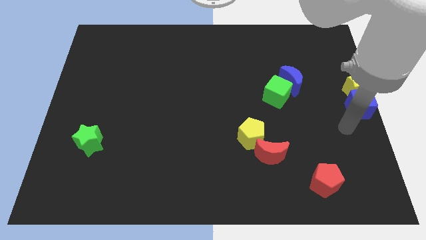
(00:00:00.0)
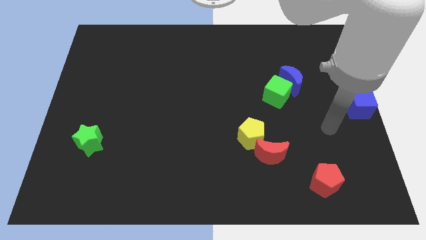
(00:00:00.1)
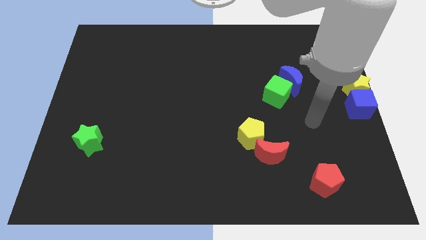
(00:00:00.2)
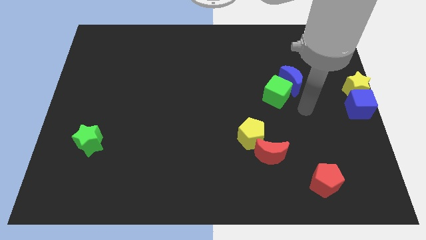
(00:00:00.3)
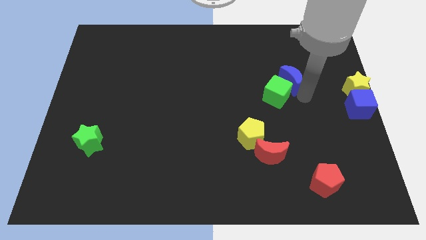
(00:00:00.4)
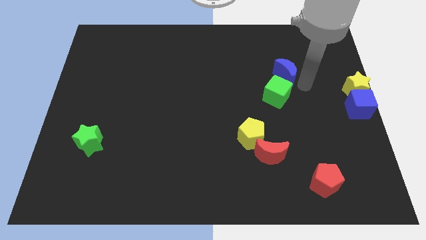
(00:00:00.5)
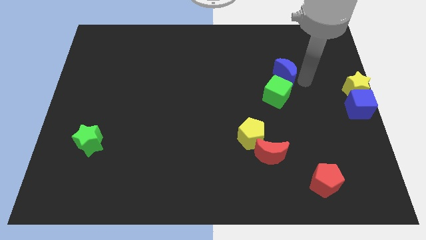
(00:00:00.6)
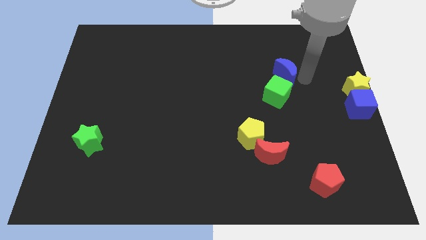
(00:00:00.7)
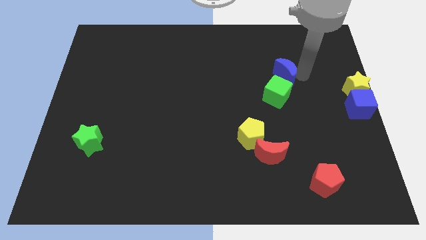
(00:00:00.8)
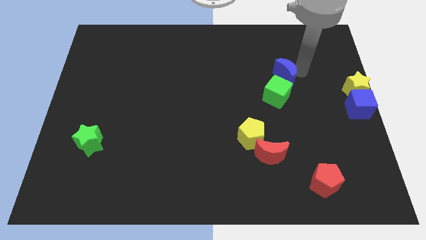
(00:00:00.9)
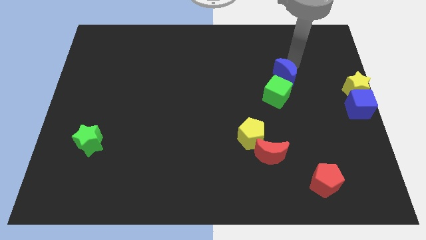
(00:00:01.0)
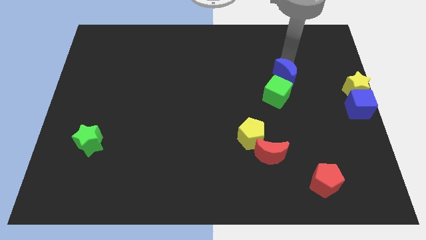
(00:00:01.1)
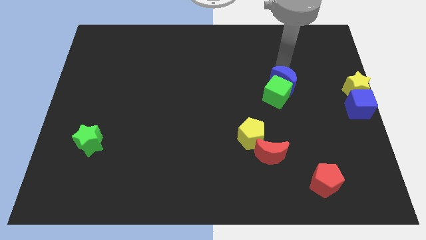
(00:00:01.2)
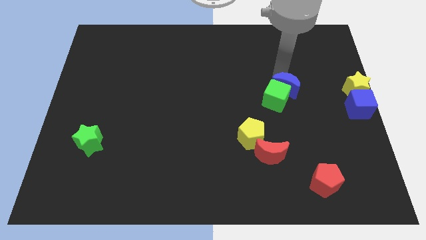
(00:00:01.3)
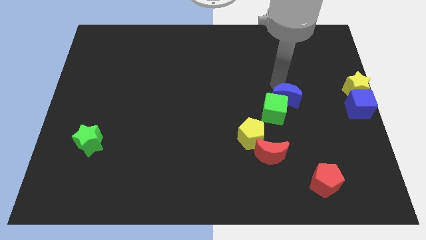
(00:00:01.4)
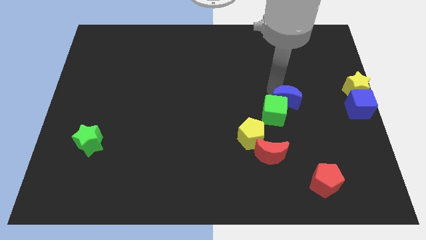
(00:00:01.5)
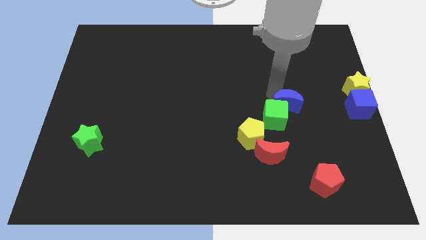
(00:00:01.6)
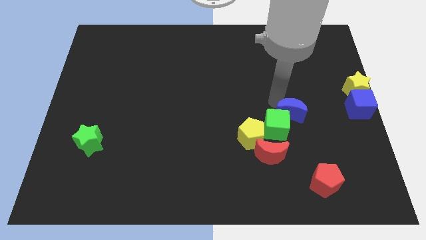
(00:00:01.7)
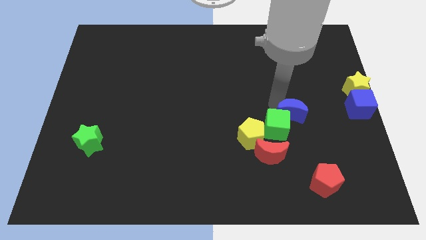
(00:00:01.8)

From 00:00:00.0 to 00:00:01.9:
push the blue moon with green cube towards red moon

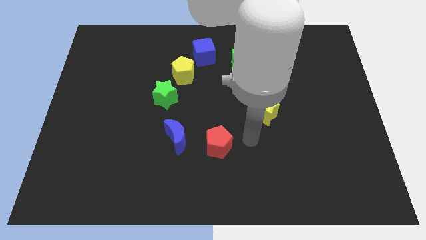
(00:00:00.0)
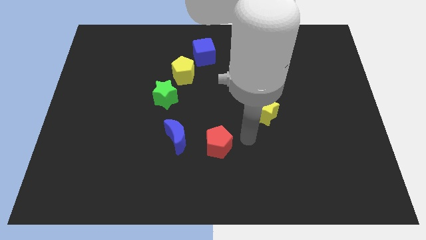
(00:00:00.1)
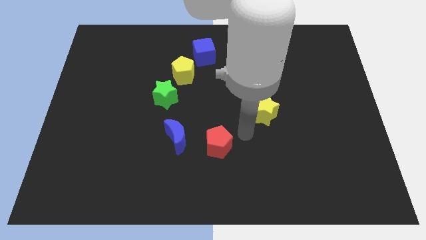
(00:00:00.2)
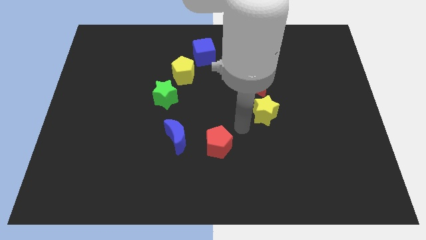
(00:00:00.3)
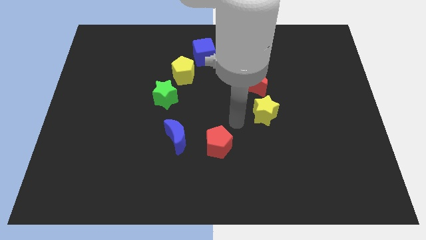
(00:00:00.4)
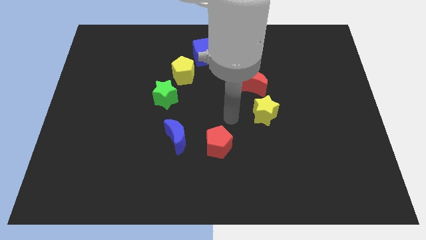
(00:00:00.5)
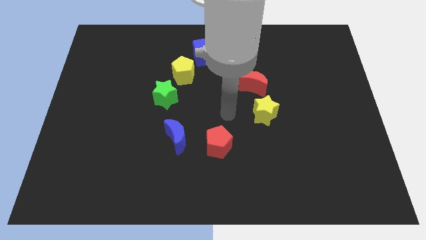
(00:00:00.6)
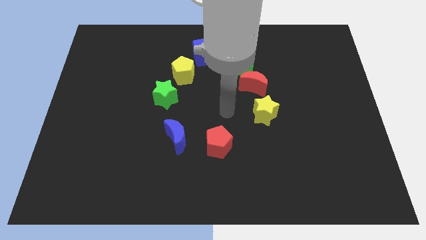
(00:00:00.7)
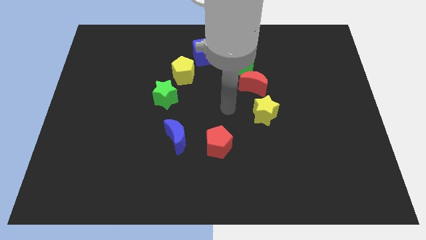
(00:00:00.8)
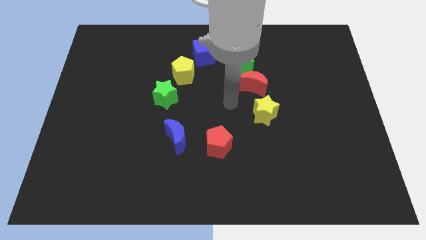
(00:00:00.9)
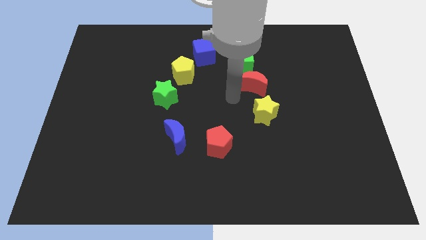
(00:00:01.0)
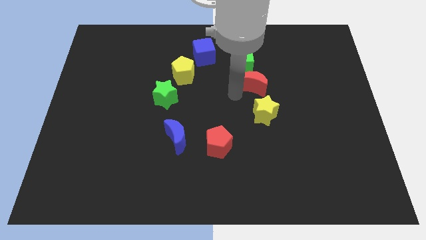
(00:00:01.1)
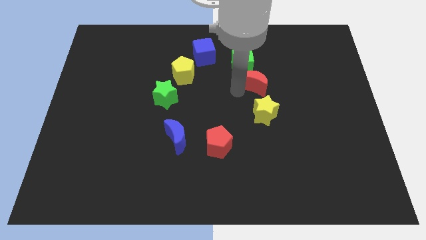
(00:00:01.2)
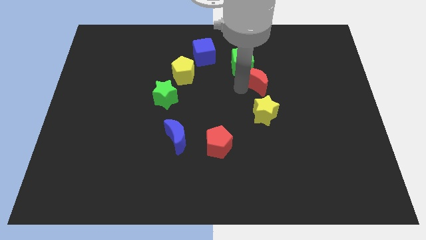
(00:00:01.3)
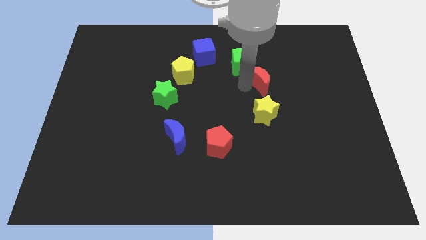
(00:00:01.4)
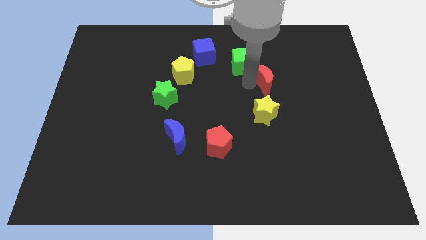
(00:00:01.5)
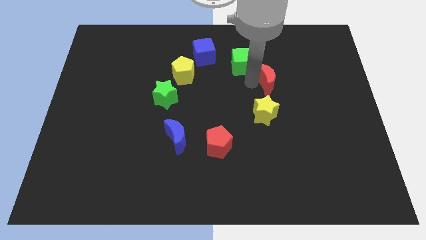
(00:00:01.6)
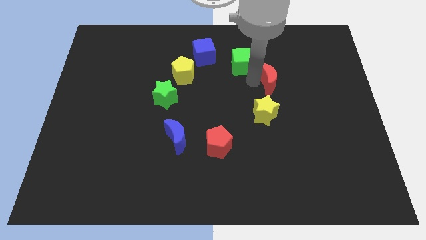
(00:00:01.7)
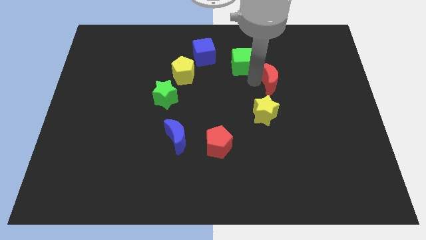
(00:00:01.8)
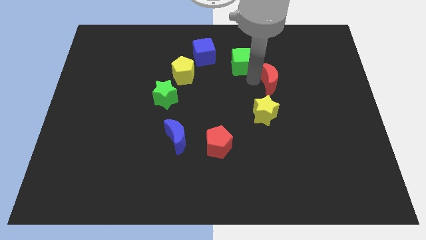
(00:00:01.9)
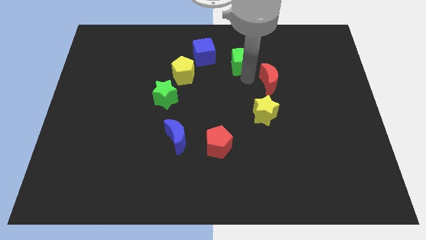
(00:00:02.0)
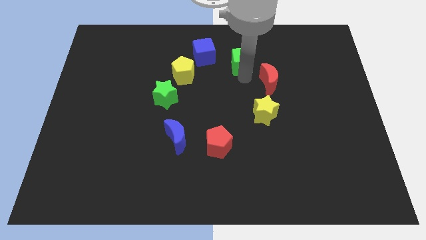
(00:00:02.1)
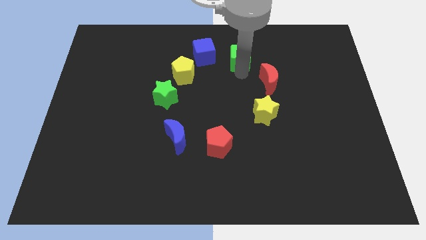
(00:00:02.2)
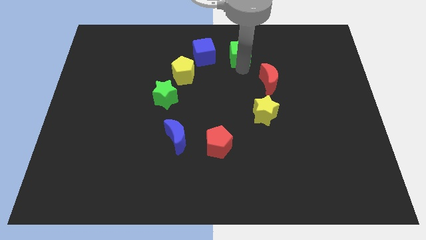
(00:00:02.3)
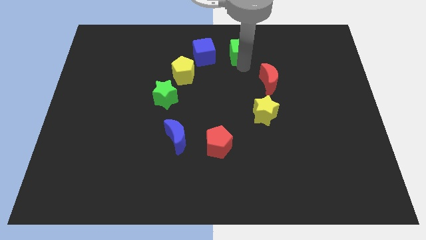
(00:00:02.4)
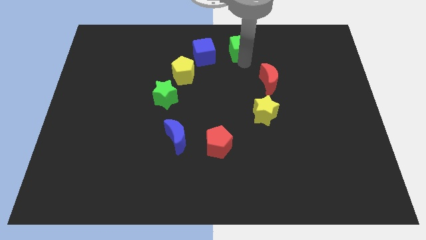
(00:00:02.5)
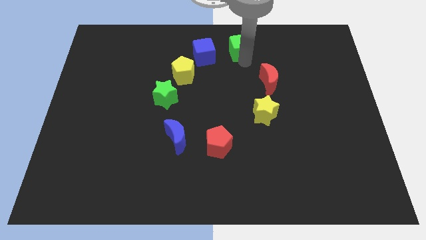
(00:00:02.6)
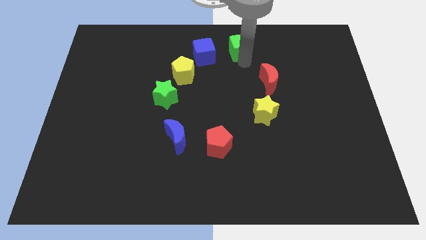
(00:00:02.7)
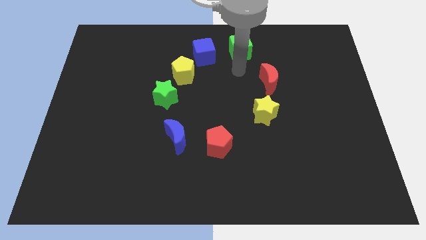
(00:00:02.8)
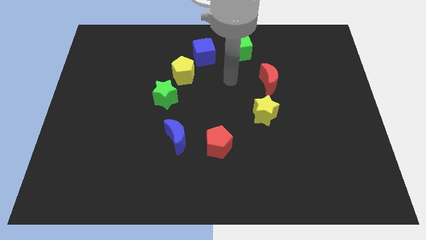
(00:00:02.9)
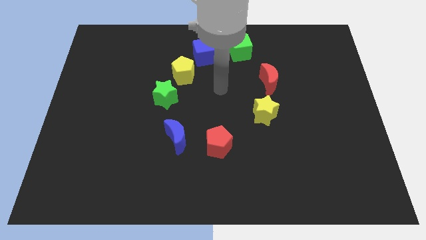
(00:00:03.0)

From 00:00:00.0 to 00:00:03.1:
place the green cube right to the blue cube

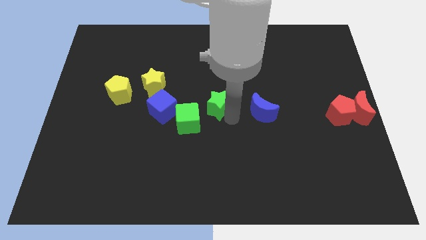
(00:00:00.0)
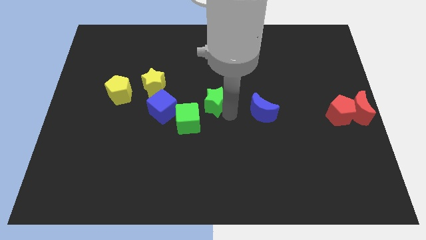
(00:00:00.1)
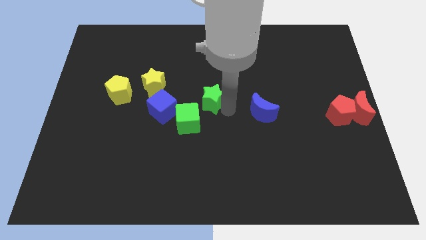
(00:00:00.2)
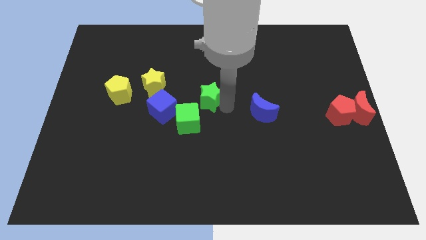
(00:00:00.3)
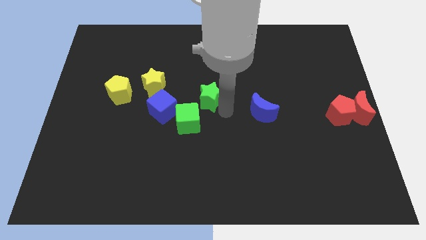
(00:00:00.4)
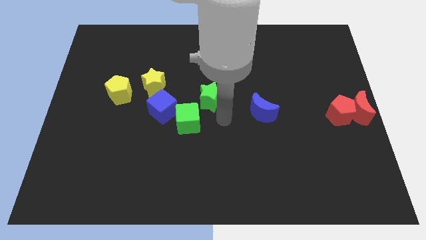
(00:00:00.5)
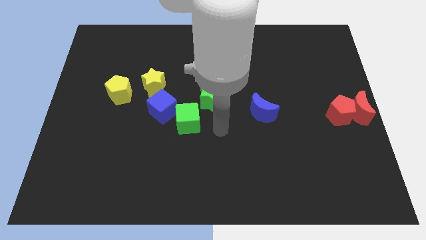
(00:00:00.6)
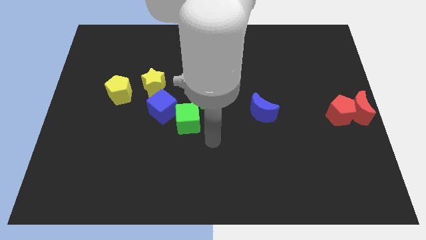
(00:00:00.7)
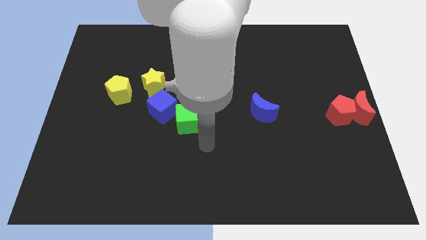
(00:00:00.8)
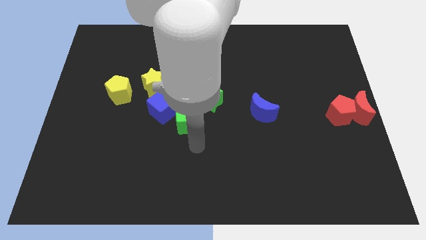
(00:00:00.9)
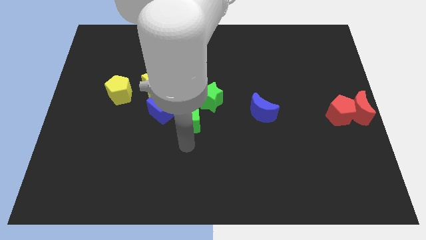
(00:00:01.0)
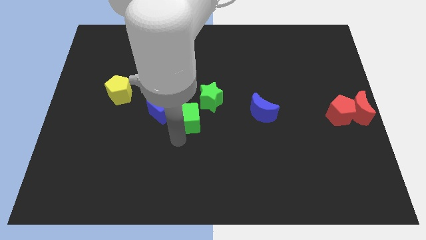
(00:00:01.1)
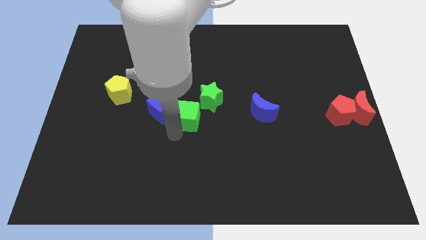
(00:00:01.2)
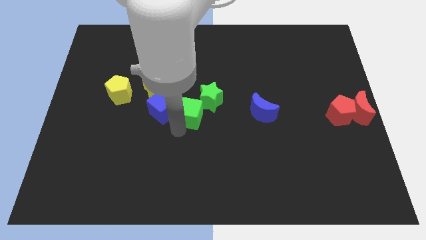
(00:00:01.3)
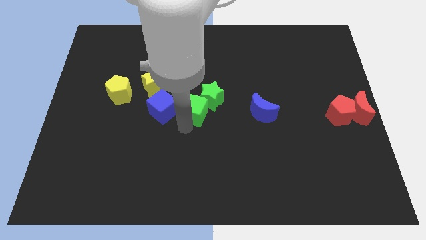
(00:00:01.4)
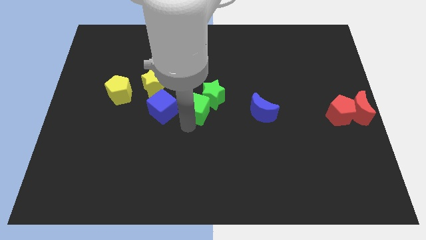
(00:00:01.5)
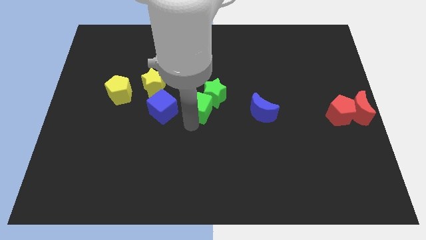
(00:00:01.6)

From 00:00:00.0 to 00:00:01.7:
move green cube into green star

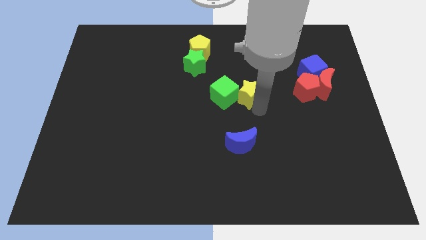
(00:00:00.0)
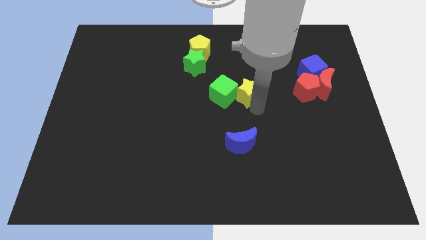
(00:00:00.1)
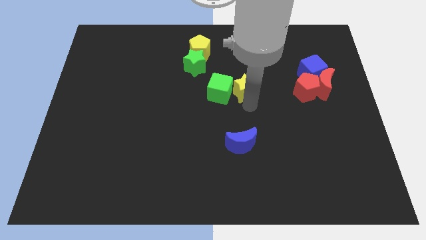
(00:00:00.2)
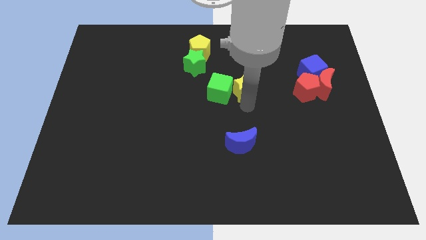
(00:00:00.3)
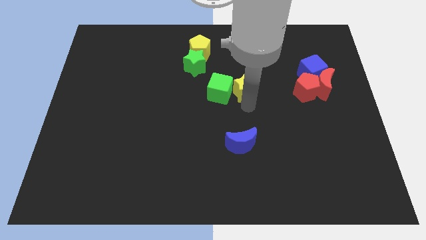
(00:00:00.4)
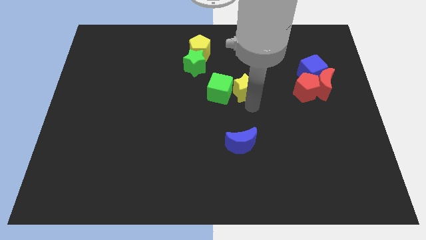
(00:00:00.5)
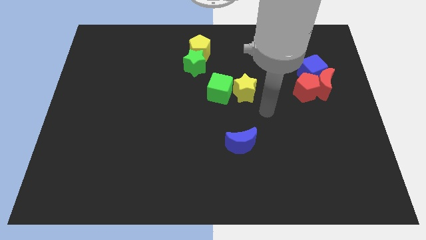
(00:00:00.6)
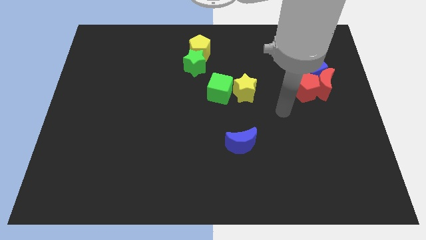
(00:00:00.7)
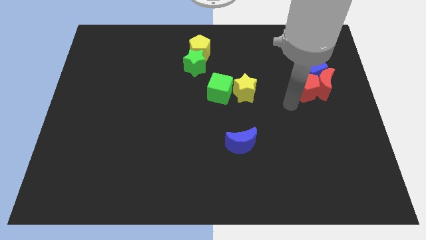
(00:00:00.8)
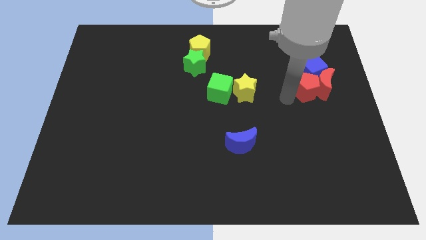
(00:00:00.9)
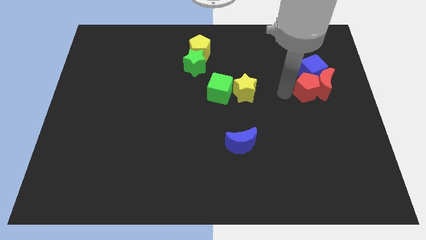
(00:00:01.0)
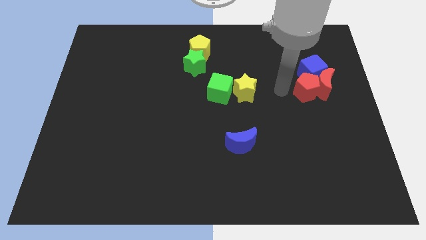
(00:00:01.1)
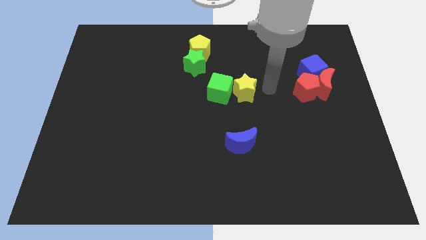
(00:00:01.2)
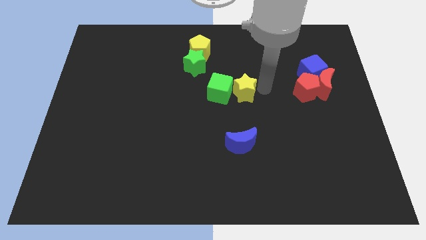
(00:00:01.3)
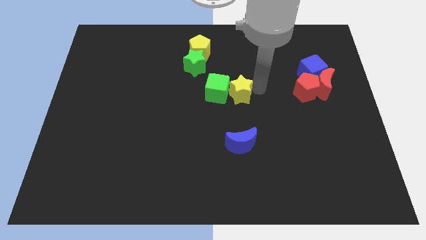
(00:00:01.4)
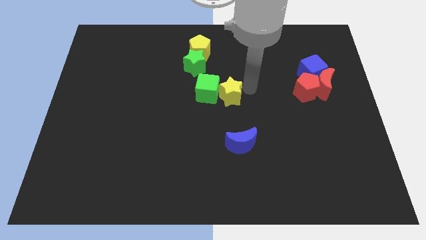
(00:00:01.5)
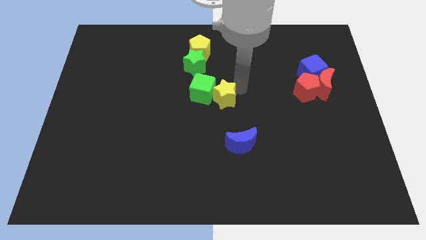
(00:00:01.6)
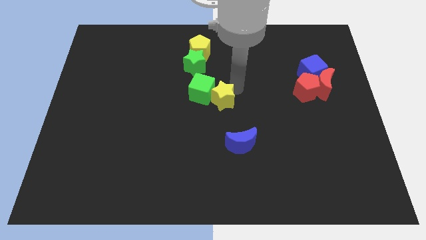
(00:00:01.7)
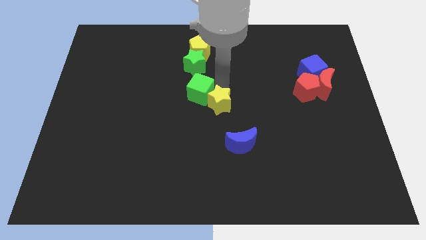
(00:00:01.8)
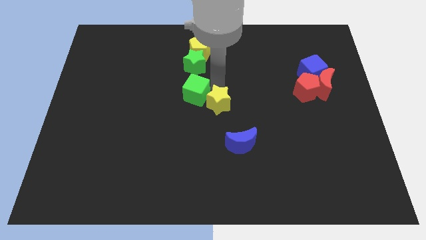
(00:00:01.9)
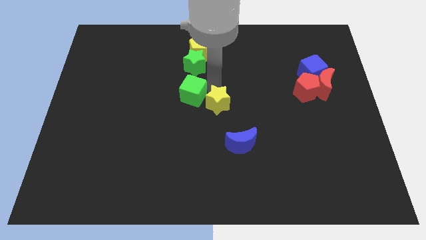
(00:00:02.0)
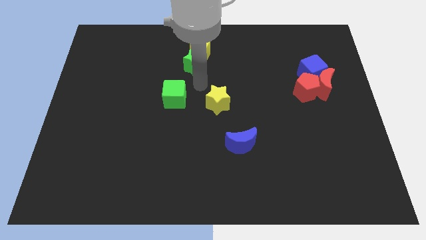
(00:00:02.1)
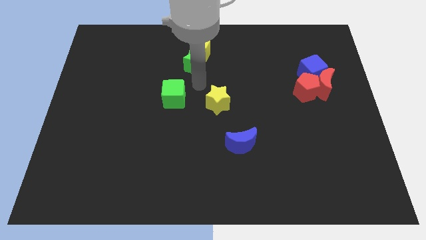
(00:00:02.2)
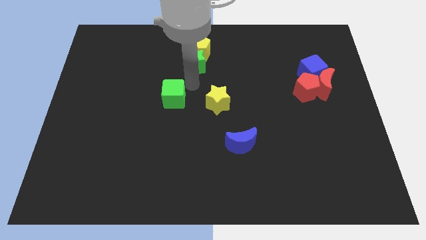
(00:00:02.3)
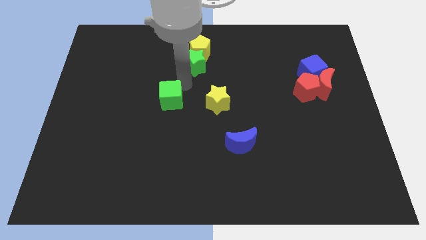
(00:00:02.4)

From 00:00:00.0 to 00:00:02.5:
separate the green cube from the yellow star
